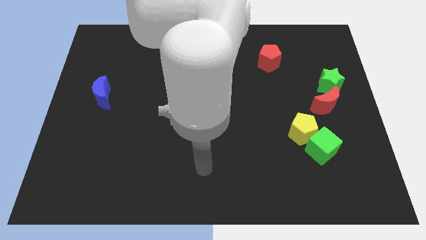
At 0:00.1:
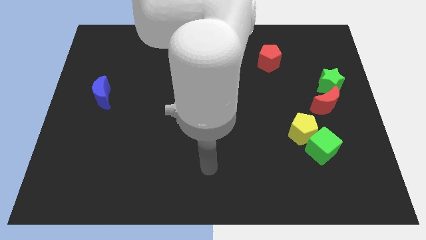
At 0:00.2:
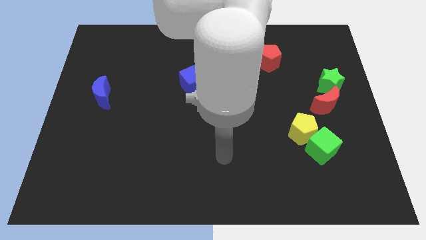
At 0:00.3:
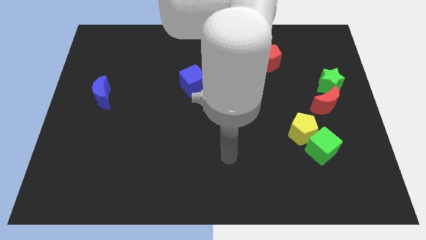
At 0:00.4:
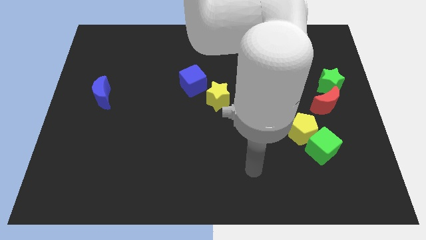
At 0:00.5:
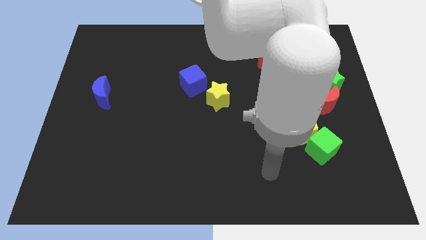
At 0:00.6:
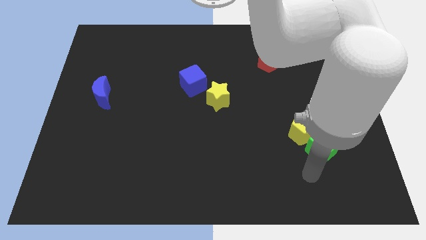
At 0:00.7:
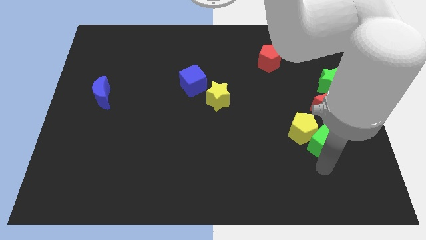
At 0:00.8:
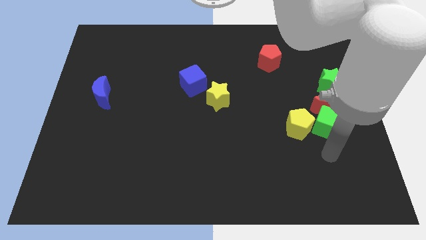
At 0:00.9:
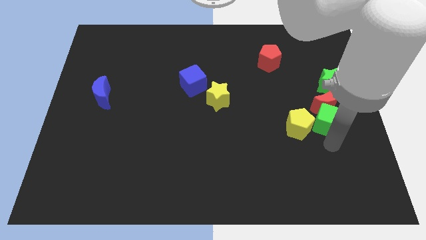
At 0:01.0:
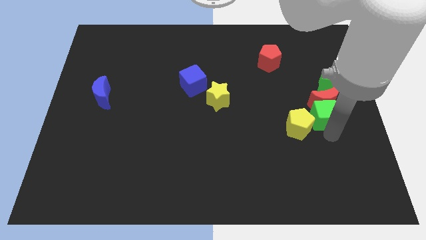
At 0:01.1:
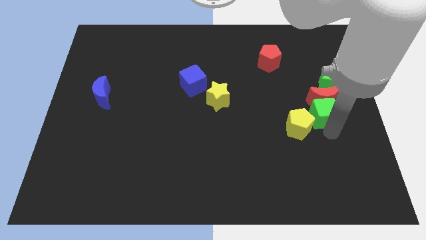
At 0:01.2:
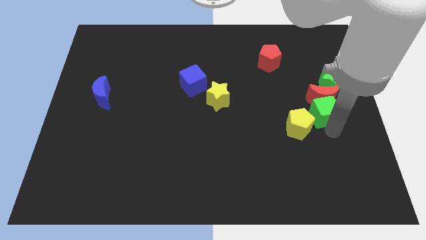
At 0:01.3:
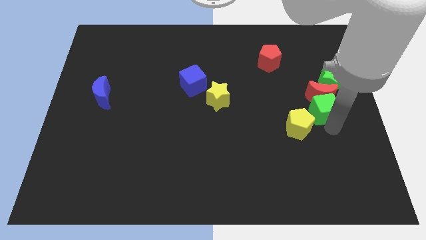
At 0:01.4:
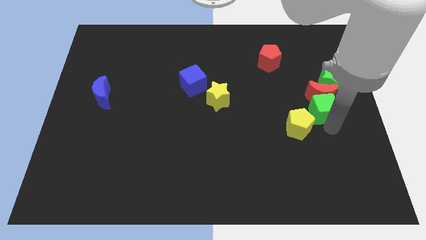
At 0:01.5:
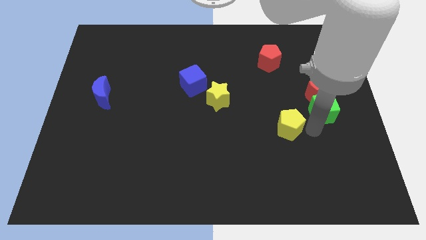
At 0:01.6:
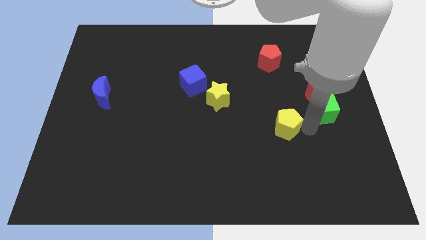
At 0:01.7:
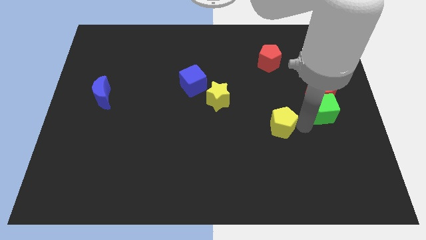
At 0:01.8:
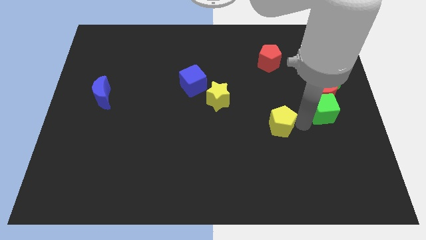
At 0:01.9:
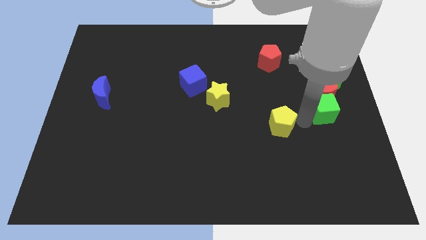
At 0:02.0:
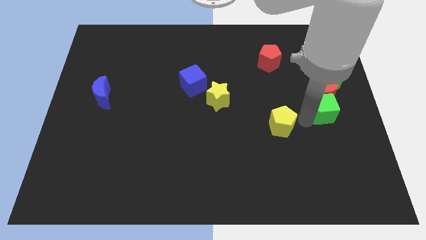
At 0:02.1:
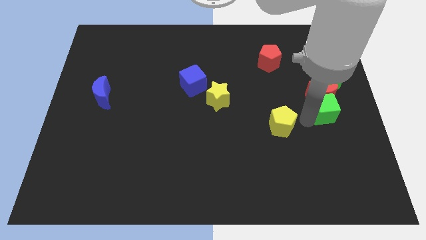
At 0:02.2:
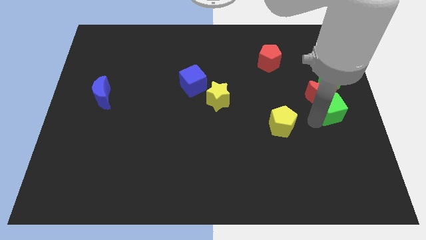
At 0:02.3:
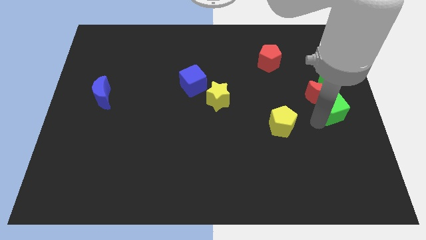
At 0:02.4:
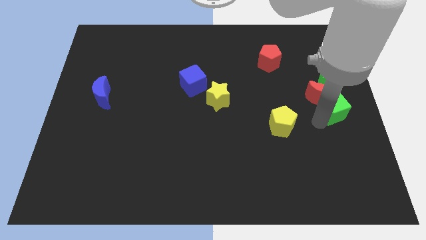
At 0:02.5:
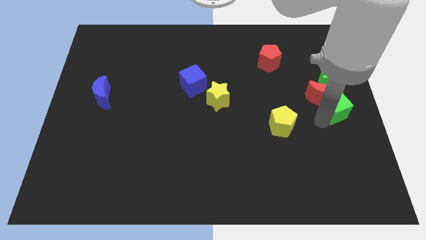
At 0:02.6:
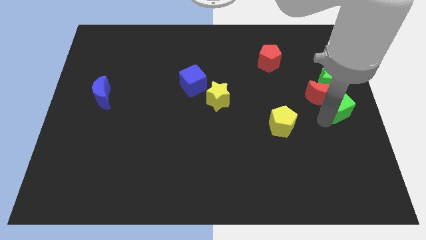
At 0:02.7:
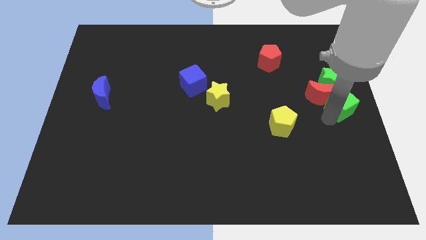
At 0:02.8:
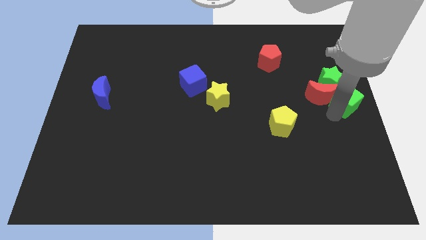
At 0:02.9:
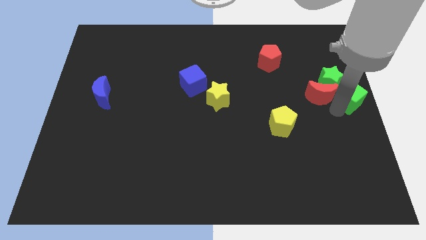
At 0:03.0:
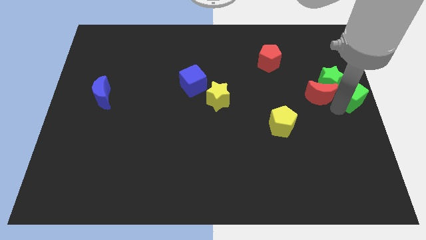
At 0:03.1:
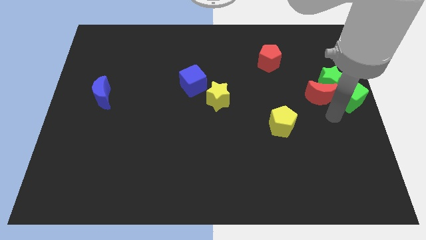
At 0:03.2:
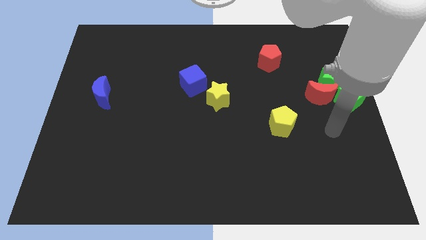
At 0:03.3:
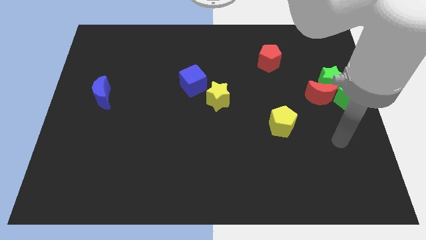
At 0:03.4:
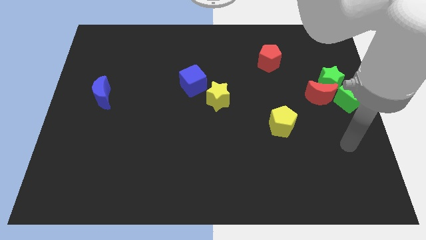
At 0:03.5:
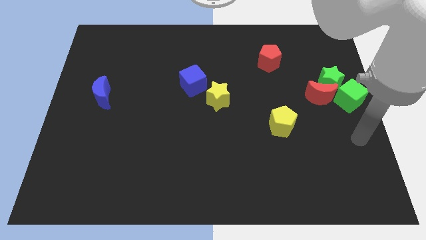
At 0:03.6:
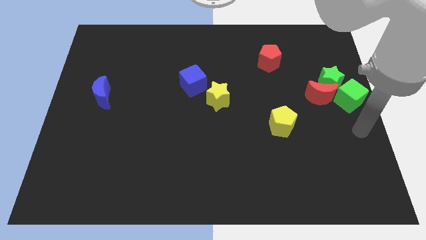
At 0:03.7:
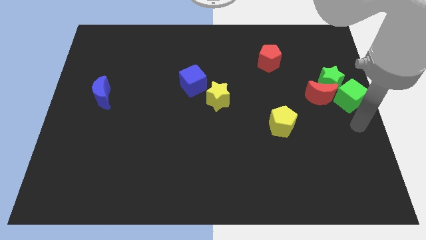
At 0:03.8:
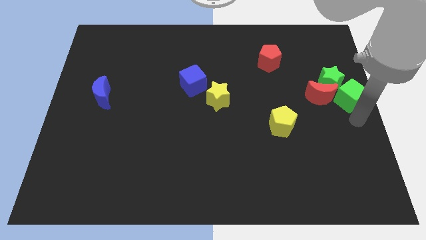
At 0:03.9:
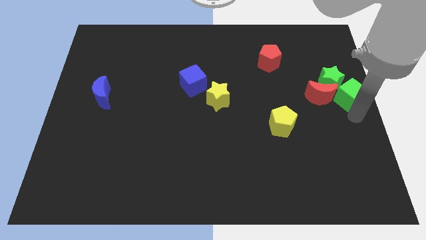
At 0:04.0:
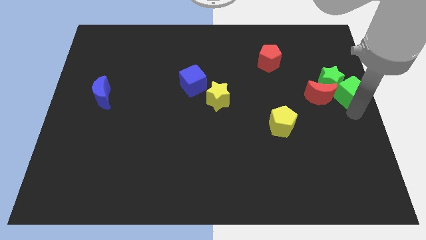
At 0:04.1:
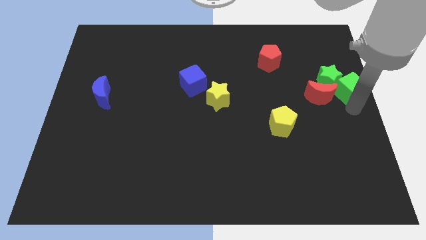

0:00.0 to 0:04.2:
push the green cube to the green star

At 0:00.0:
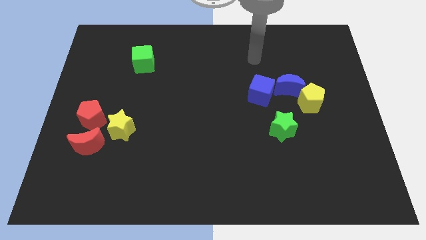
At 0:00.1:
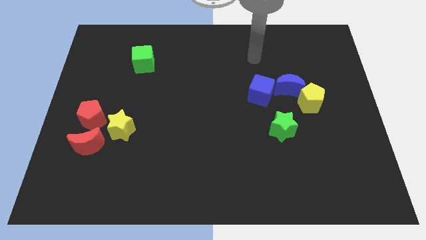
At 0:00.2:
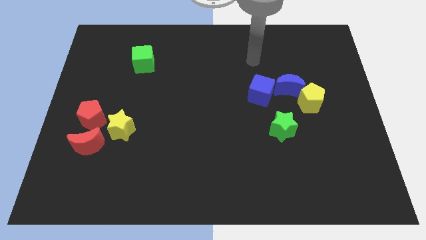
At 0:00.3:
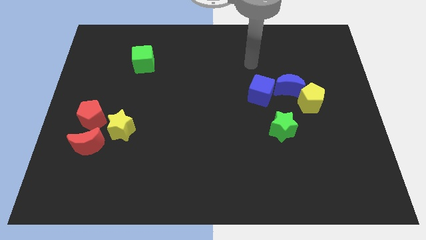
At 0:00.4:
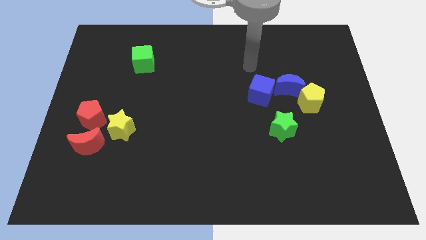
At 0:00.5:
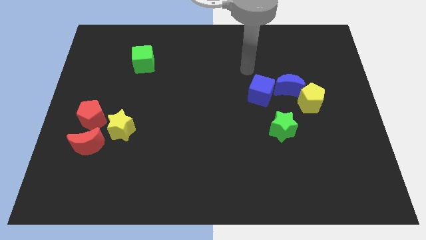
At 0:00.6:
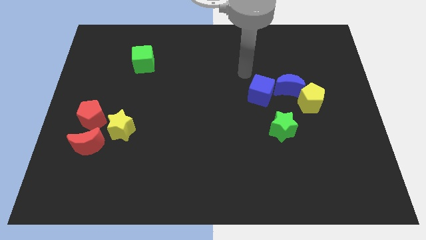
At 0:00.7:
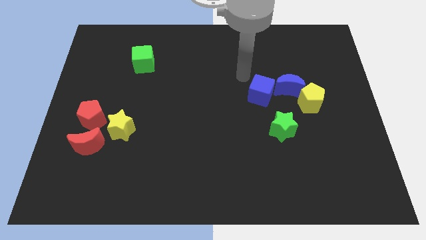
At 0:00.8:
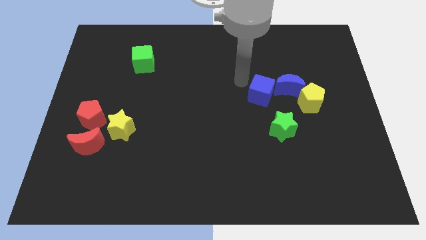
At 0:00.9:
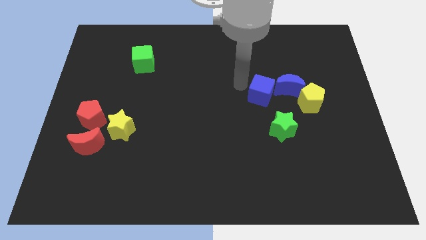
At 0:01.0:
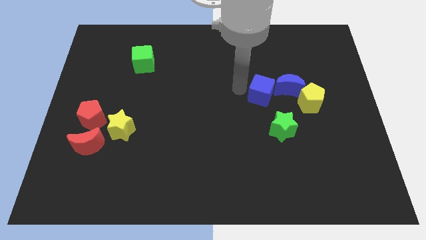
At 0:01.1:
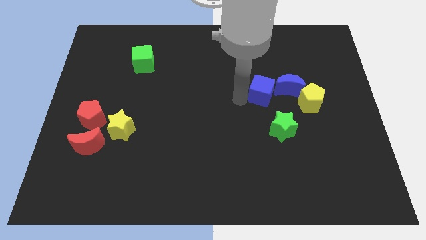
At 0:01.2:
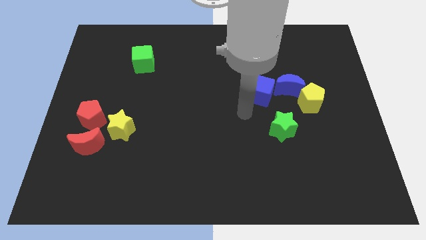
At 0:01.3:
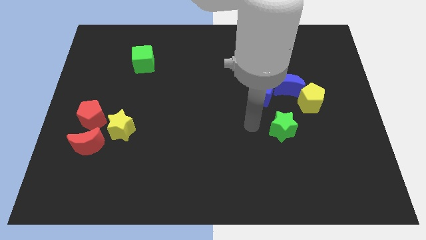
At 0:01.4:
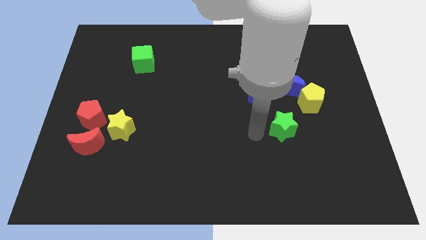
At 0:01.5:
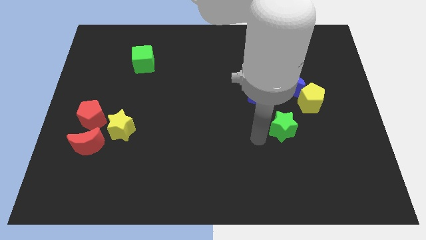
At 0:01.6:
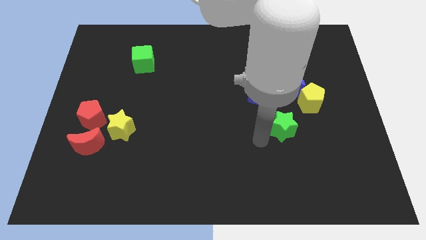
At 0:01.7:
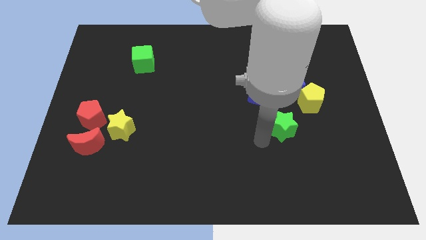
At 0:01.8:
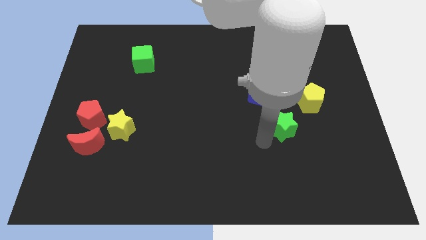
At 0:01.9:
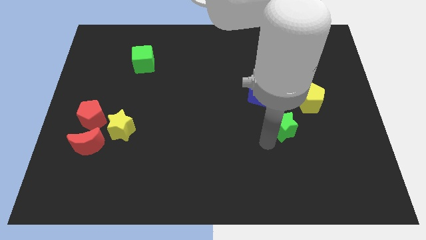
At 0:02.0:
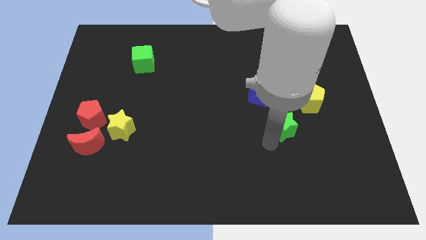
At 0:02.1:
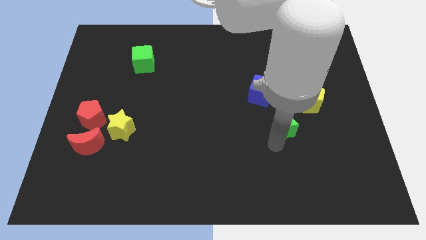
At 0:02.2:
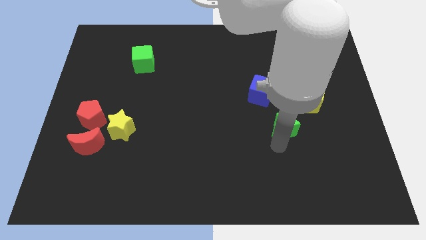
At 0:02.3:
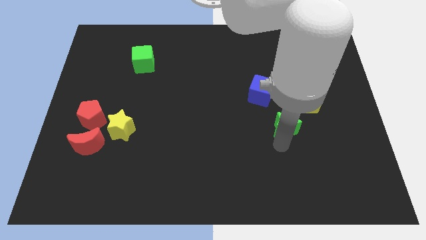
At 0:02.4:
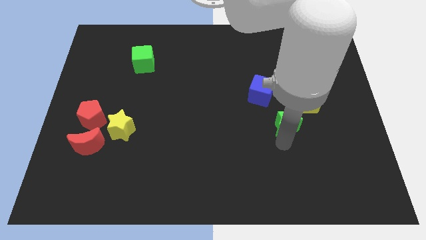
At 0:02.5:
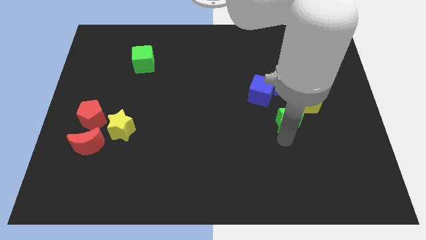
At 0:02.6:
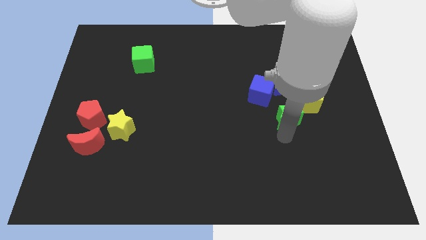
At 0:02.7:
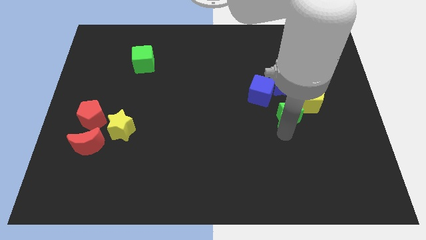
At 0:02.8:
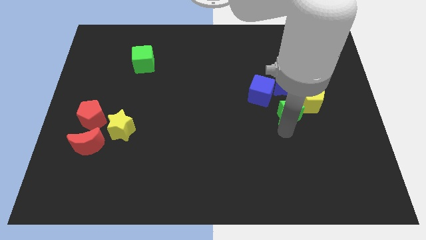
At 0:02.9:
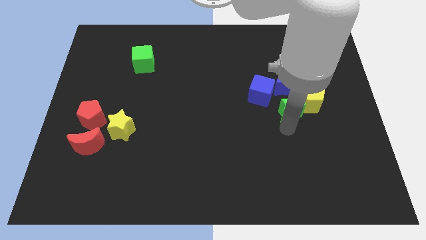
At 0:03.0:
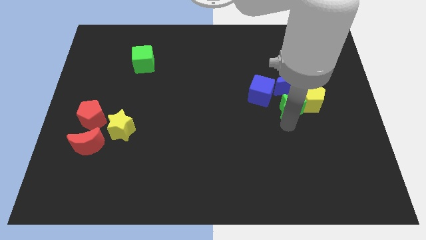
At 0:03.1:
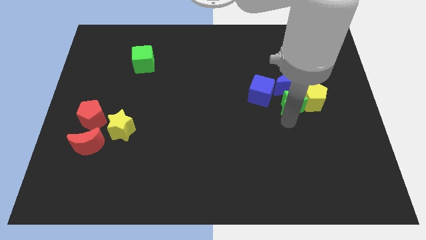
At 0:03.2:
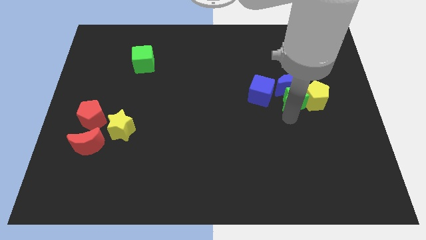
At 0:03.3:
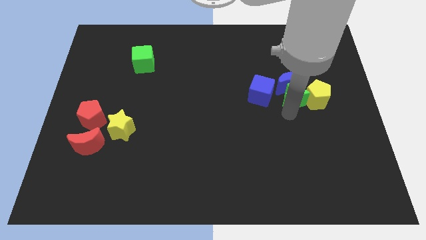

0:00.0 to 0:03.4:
push the green star towards the blue moon

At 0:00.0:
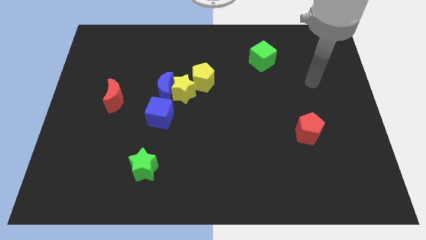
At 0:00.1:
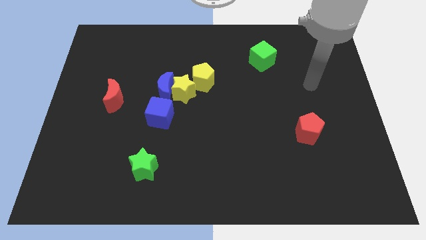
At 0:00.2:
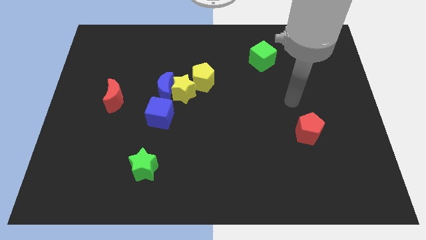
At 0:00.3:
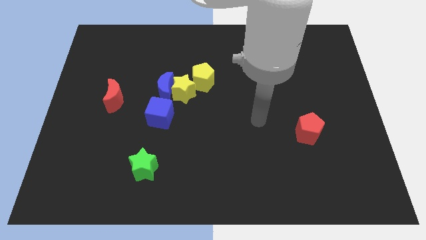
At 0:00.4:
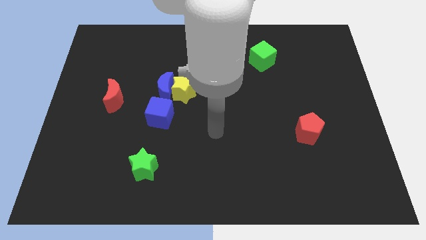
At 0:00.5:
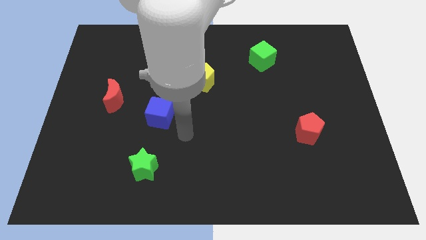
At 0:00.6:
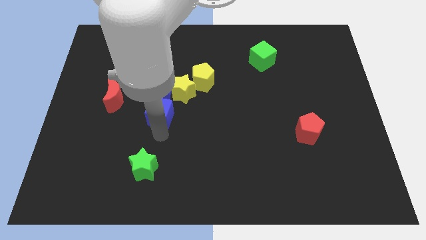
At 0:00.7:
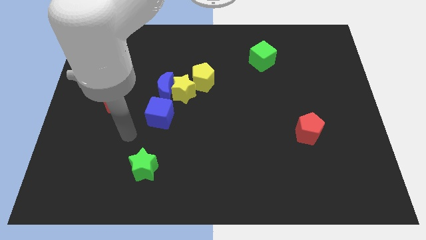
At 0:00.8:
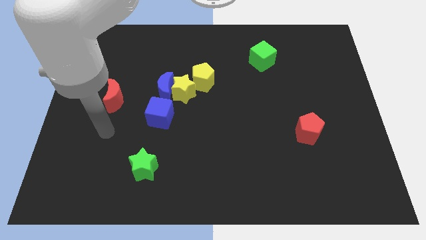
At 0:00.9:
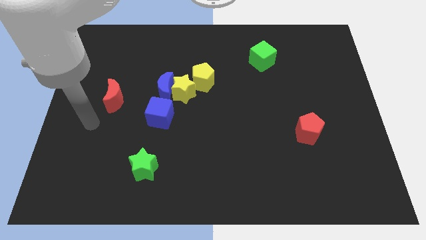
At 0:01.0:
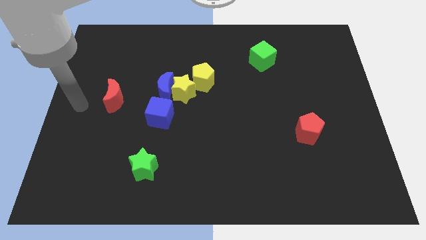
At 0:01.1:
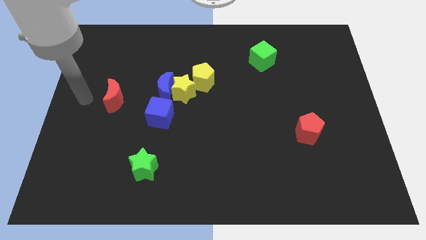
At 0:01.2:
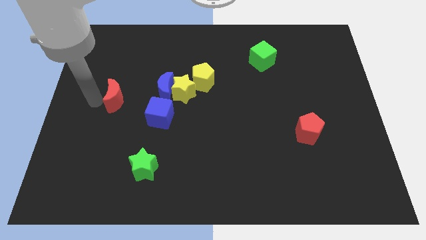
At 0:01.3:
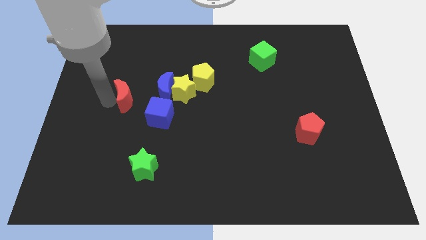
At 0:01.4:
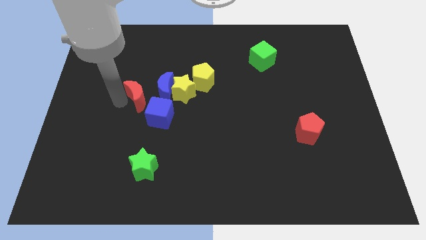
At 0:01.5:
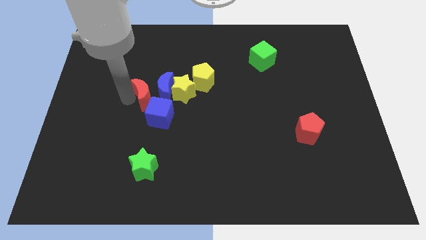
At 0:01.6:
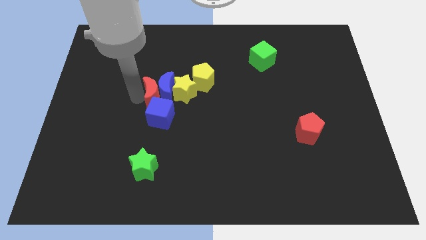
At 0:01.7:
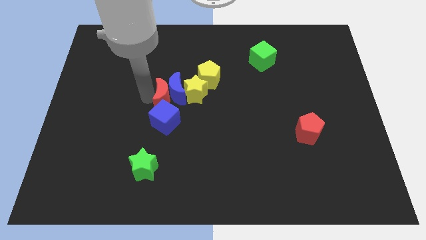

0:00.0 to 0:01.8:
put the red moon towards the blue moon
